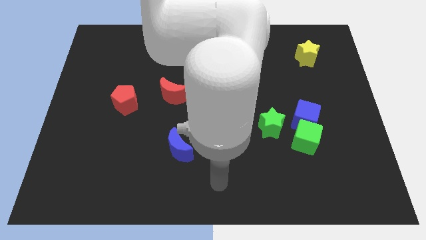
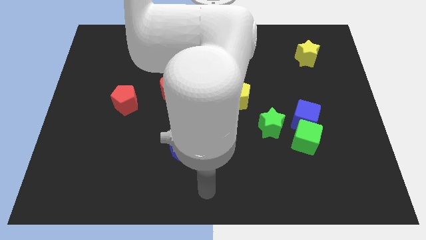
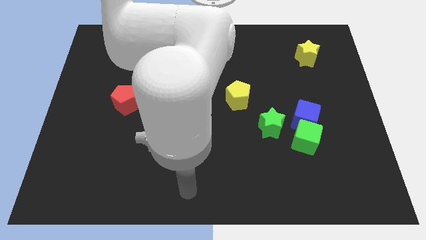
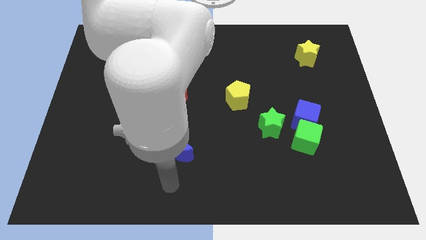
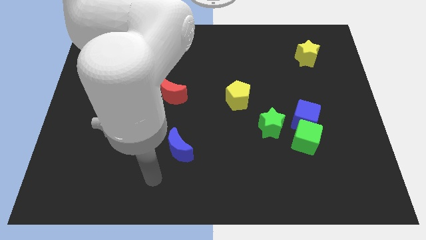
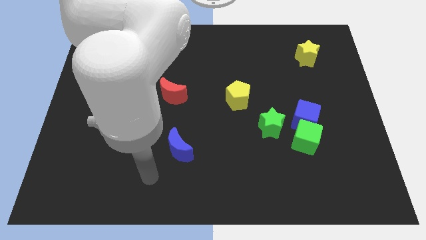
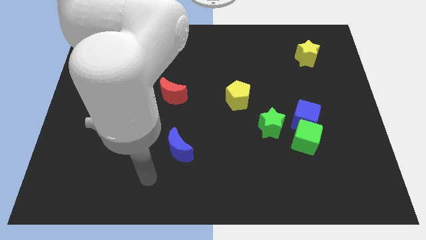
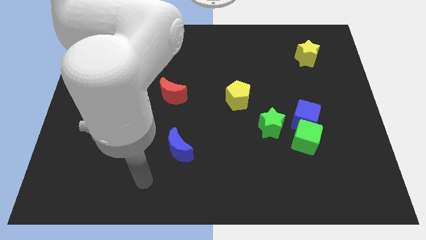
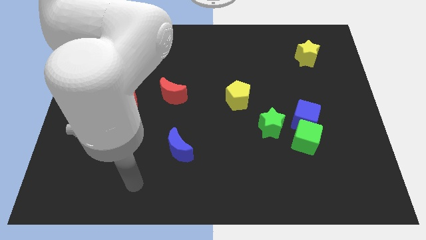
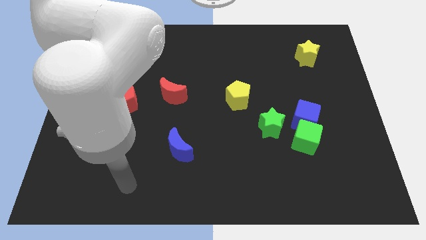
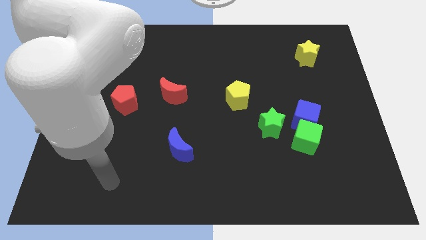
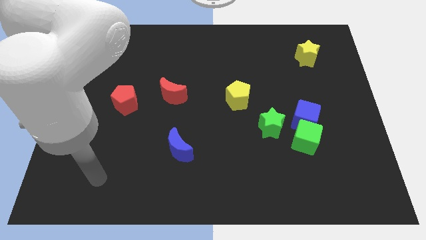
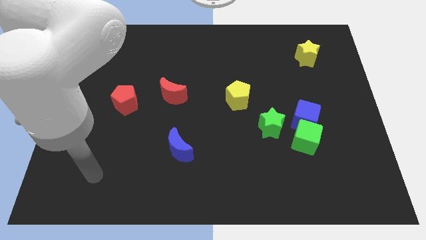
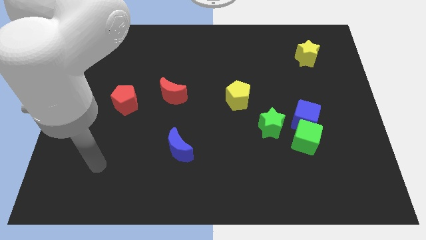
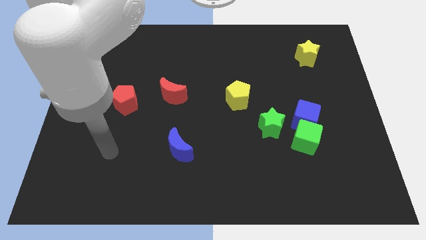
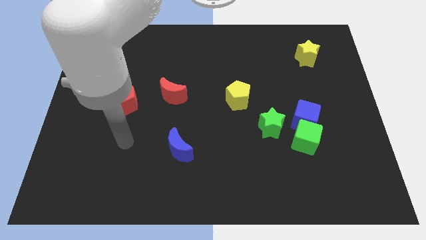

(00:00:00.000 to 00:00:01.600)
move your arm to the left of the blue moon

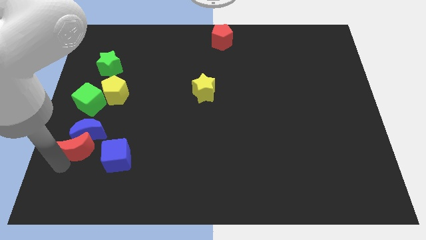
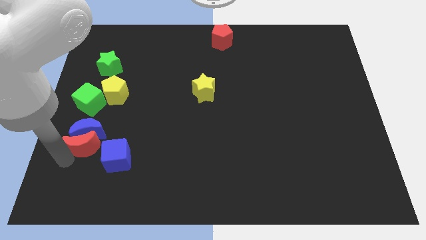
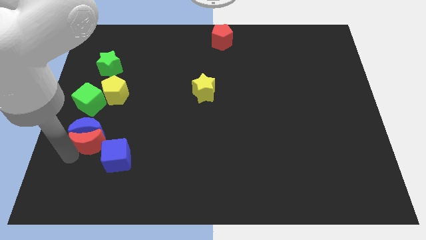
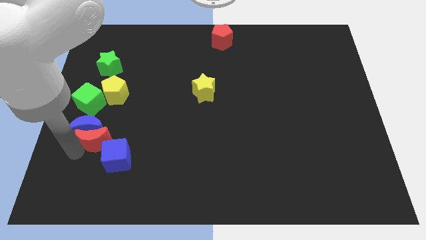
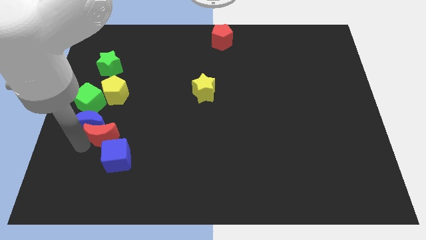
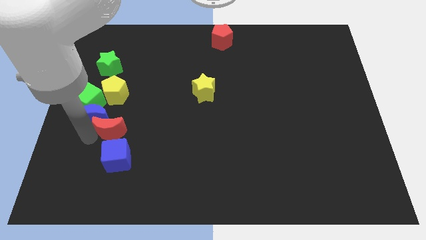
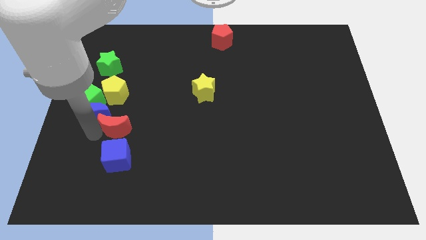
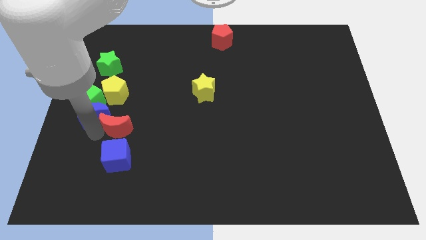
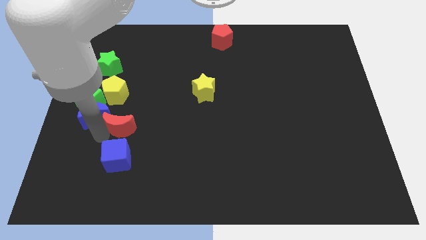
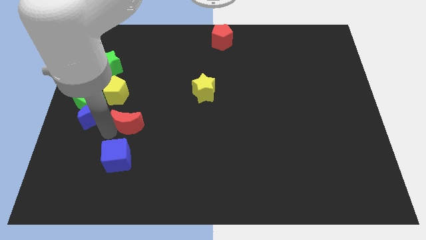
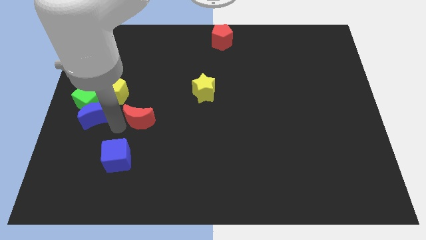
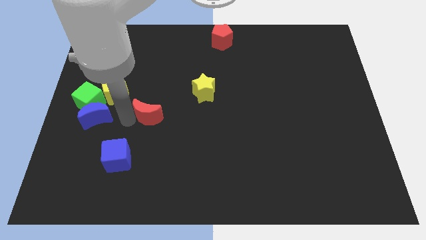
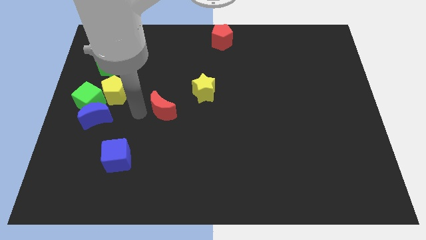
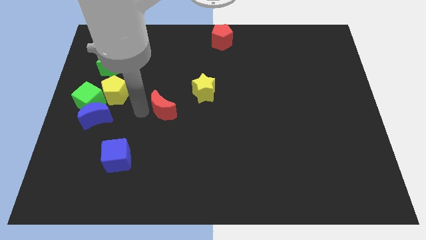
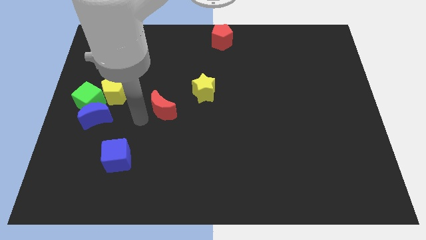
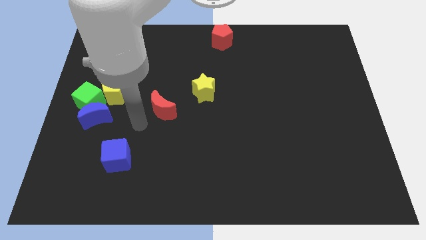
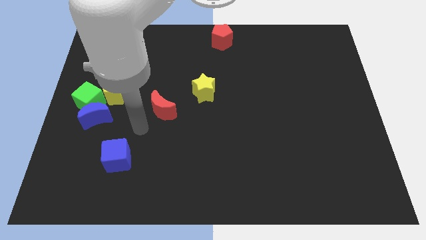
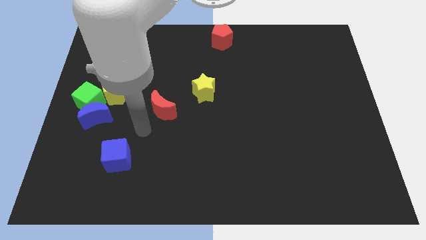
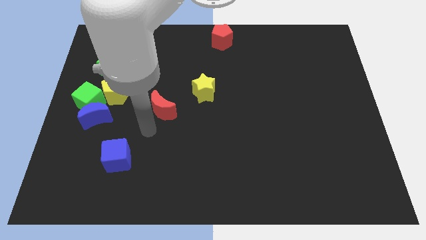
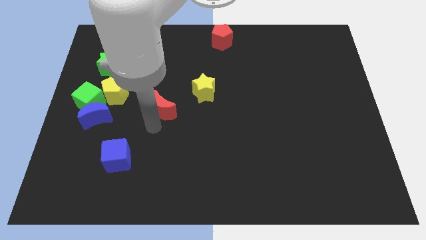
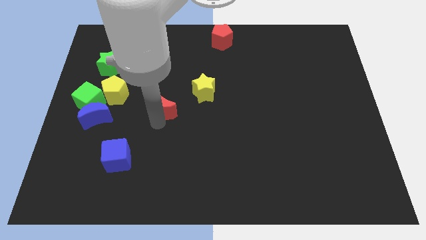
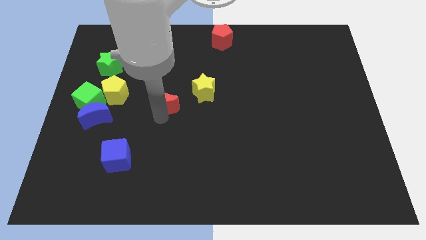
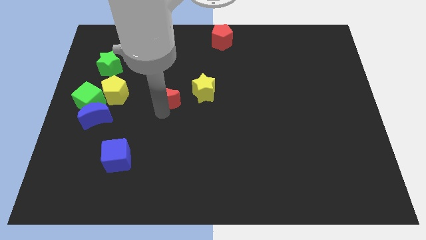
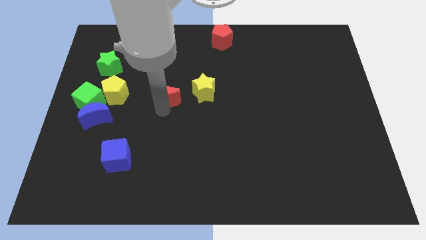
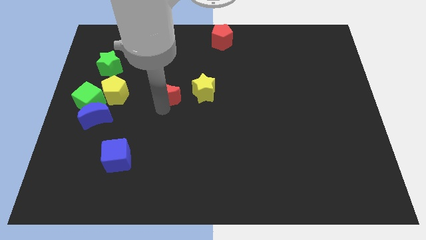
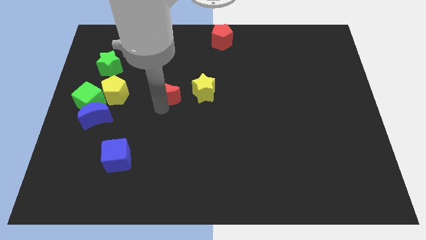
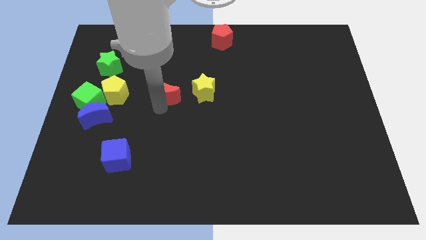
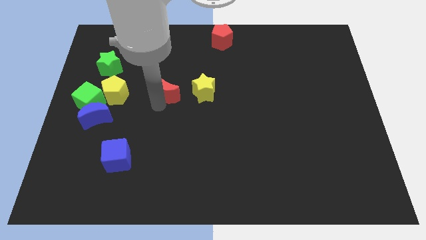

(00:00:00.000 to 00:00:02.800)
slide the red moon adjacent to the yellow star

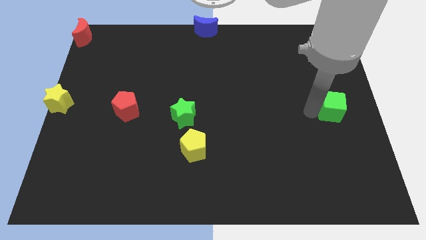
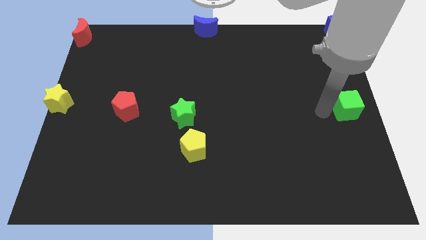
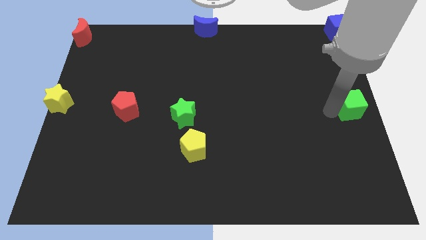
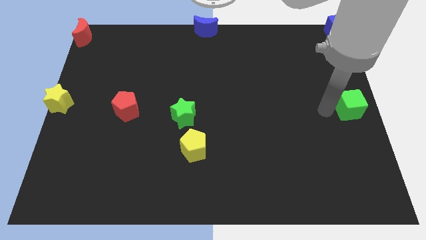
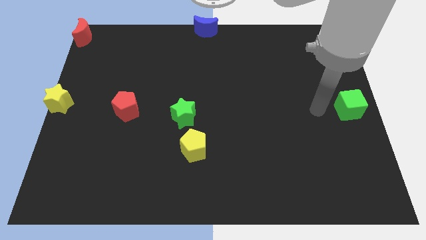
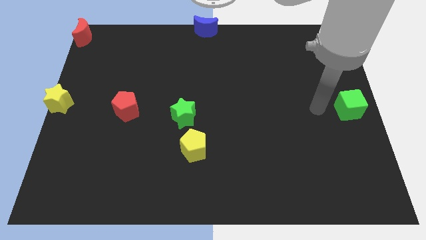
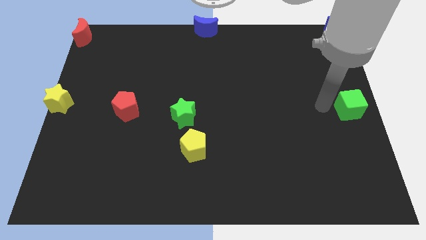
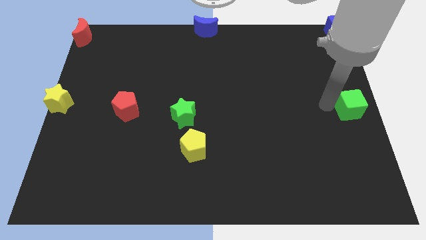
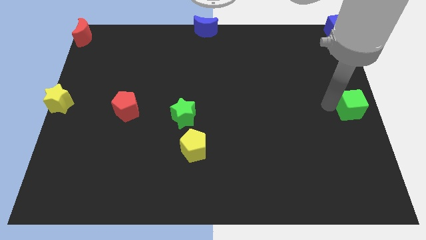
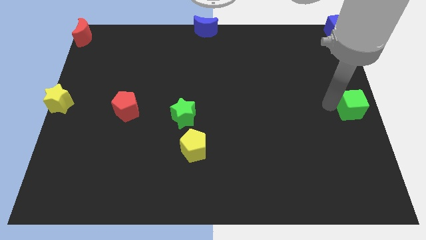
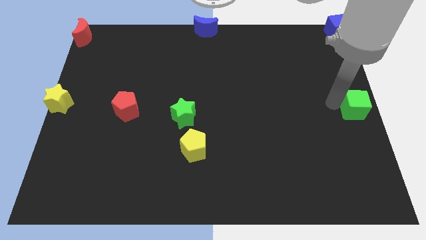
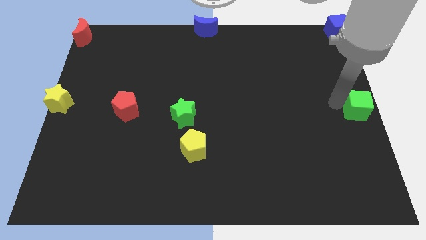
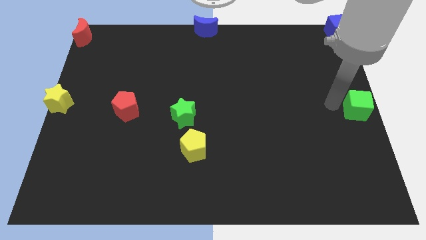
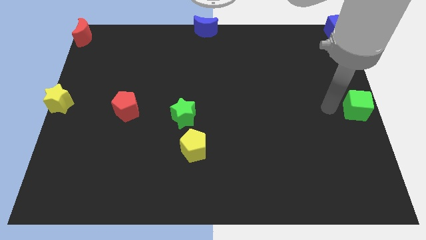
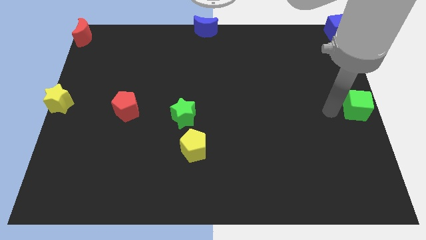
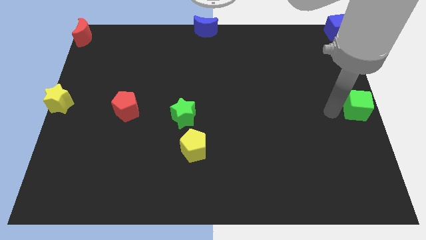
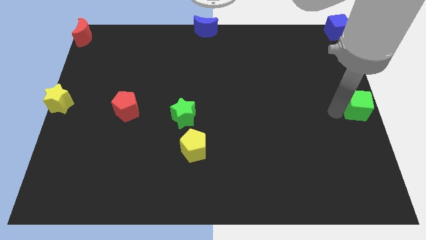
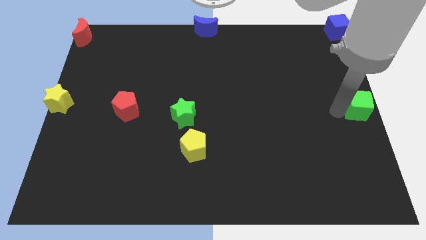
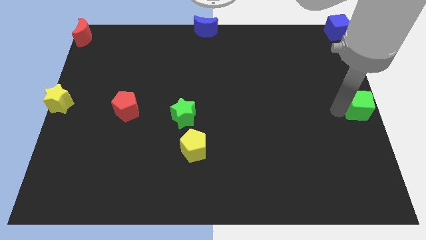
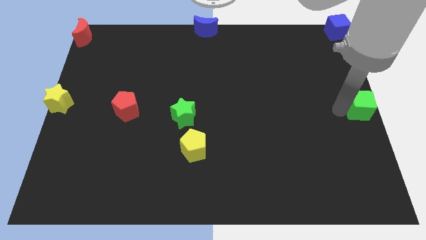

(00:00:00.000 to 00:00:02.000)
push the green cube to the center right of the board

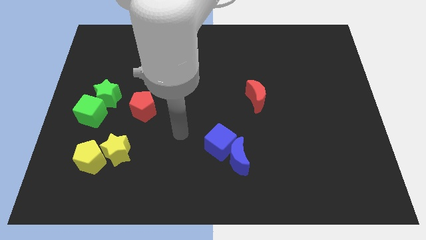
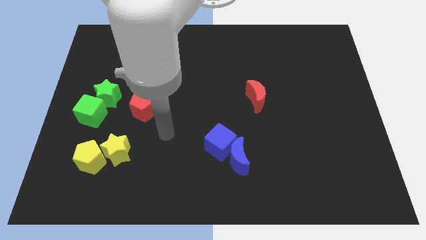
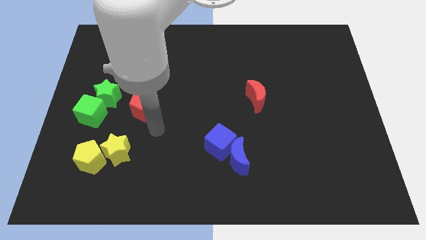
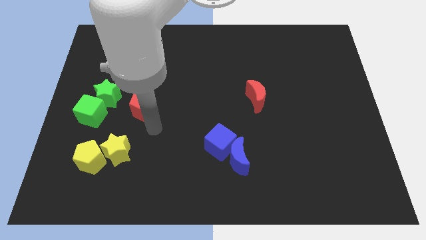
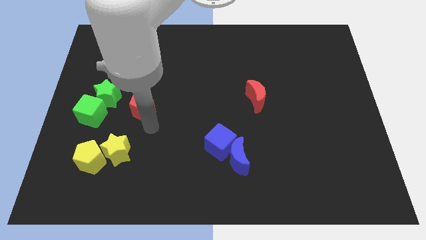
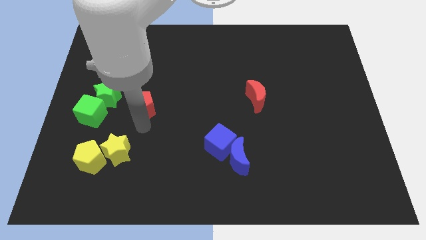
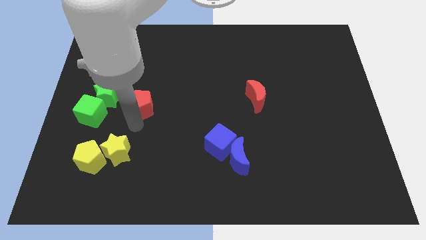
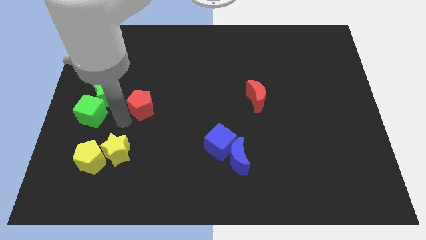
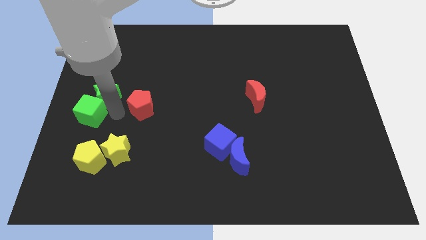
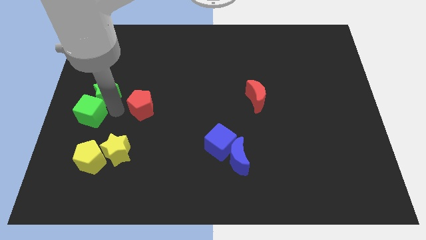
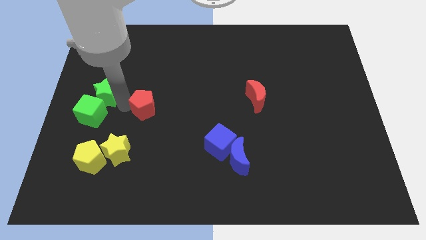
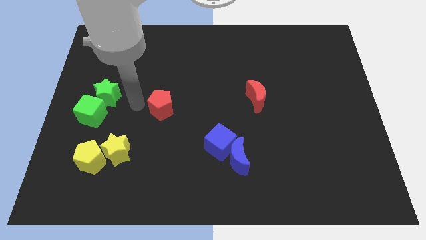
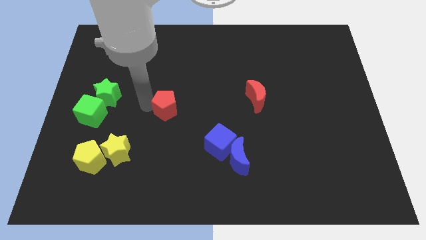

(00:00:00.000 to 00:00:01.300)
move red pentagon slightly right

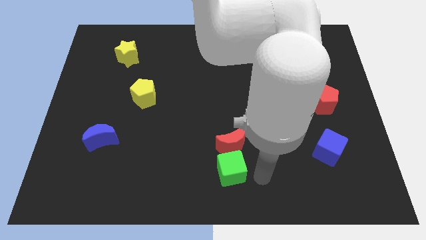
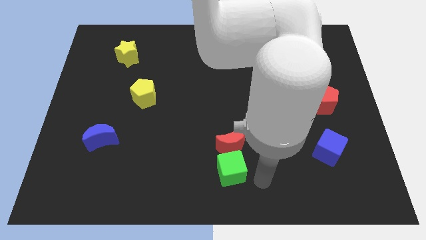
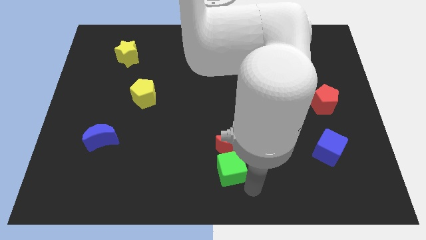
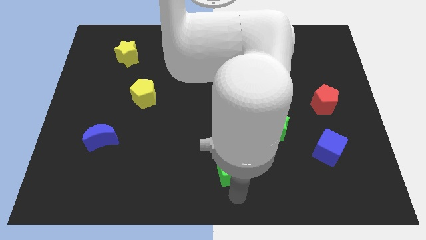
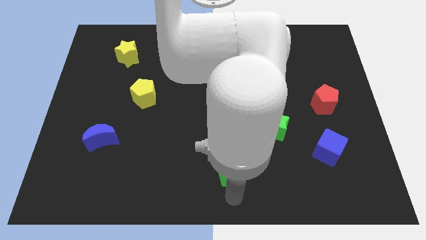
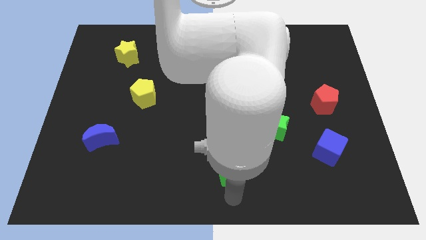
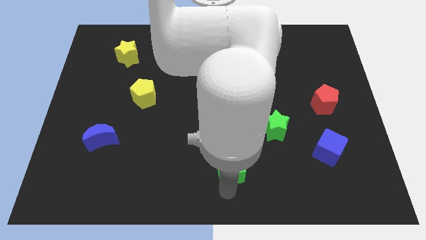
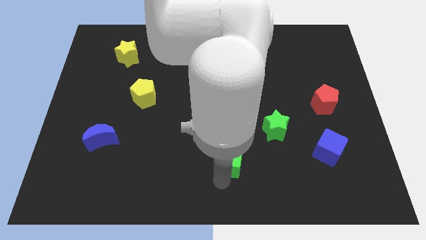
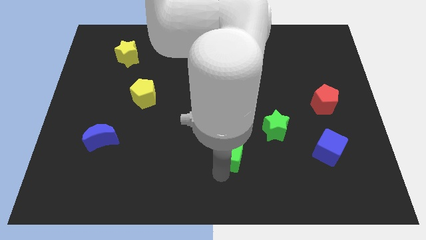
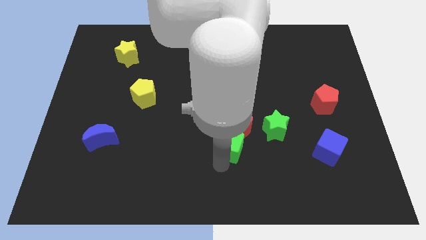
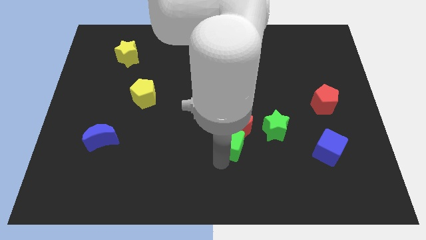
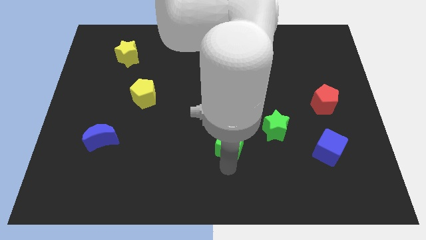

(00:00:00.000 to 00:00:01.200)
push the green cube into the red moon
